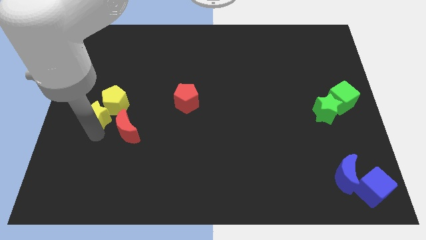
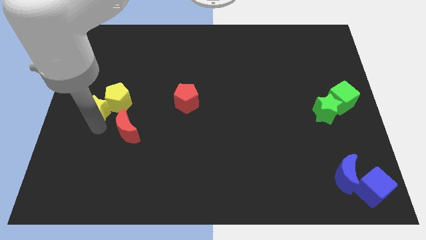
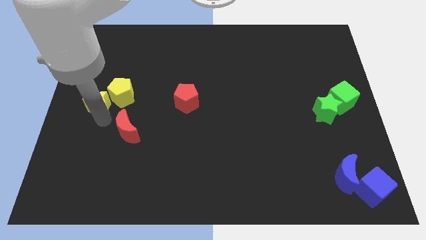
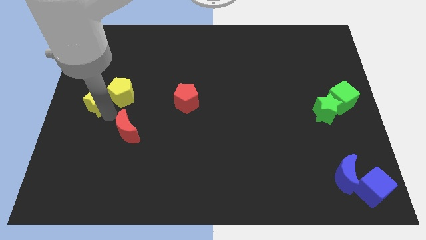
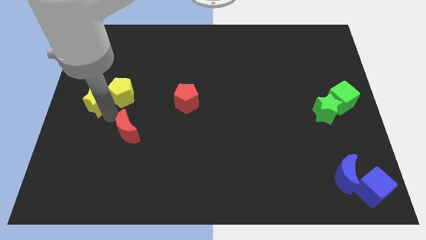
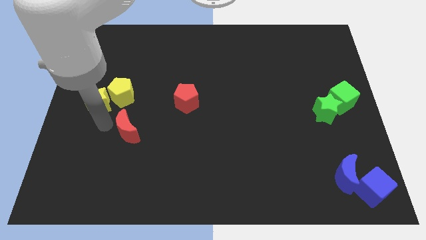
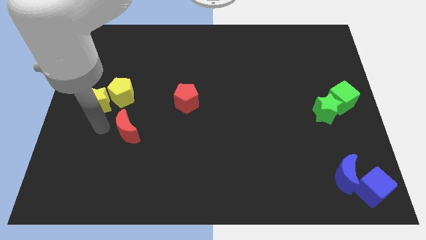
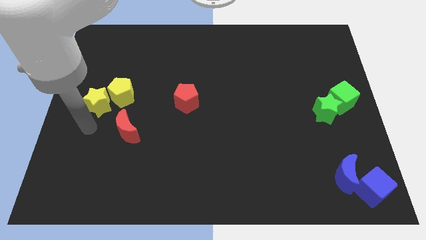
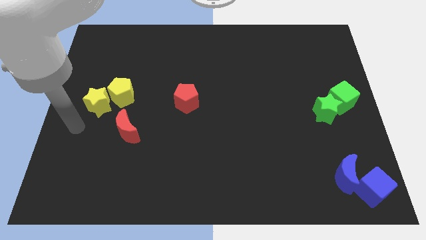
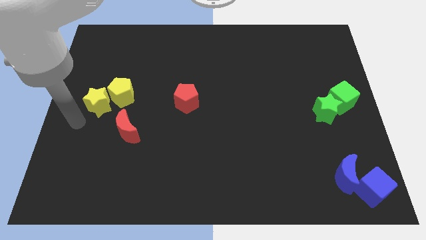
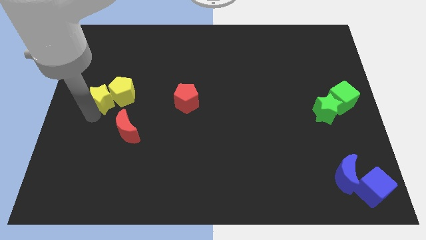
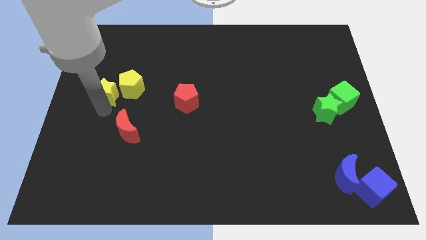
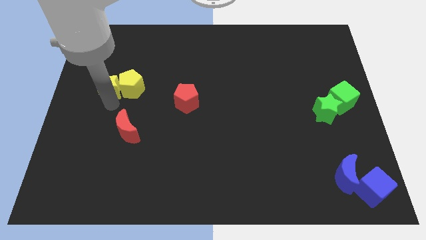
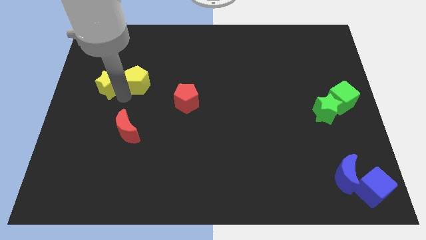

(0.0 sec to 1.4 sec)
push the yellow star to the left of the yellow pentagon

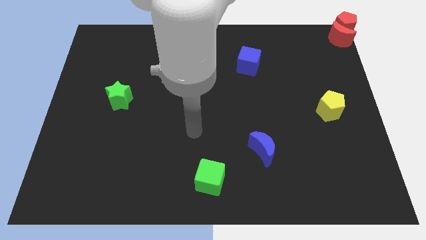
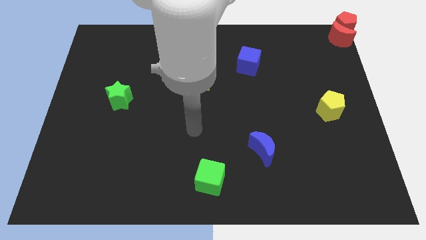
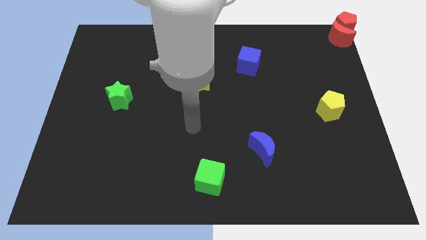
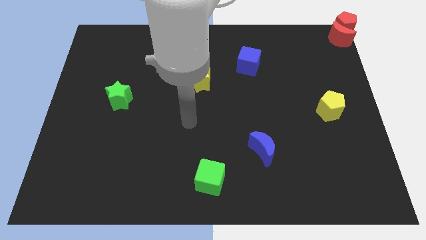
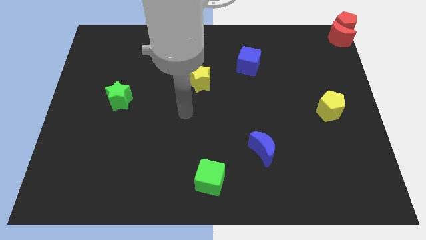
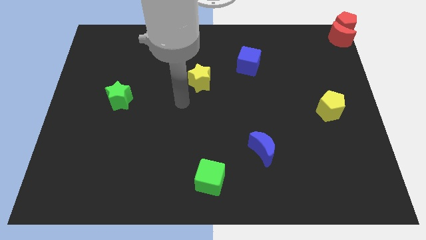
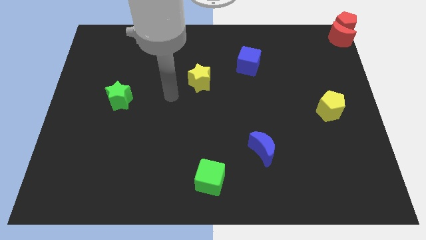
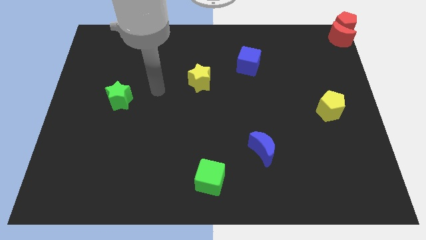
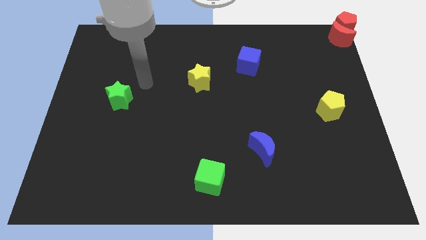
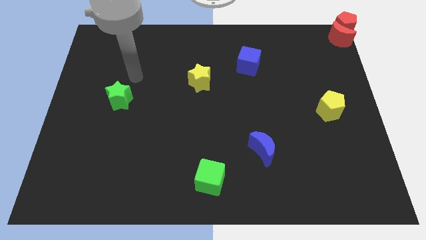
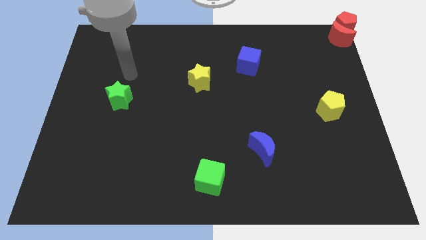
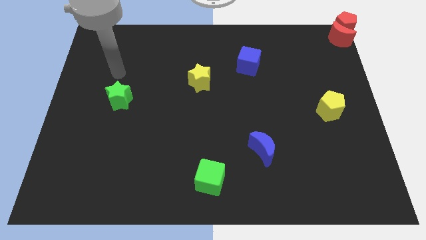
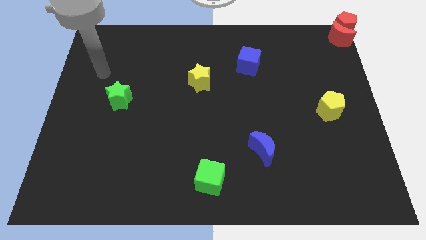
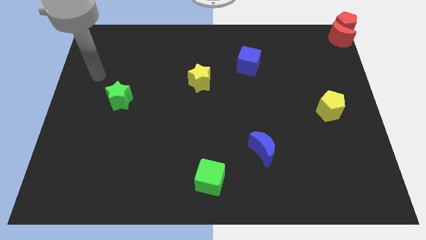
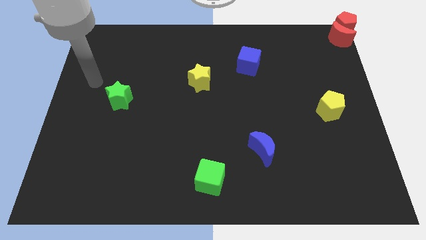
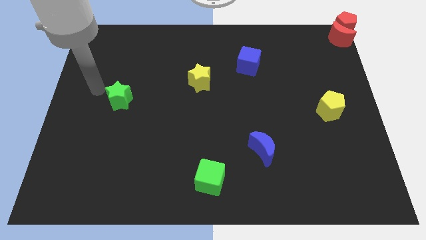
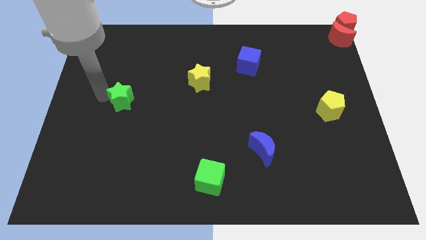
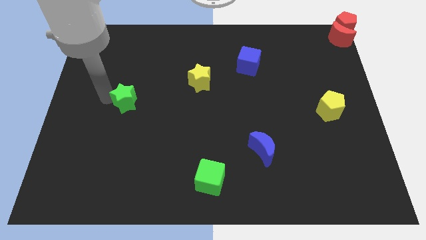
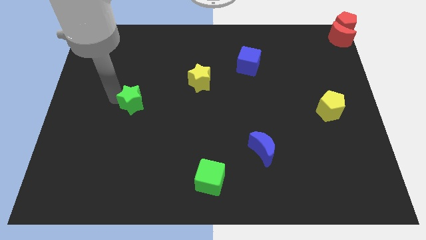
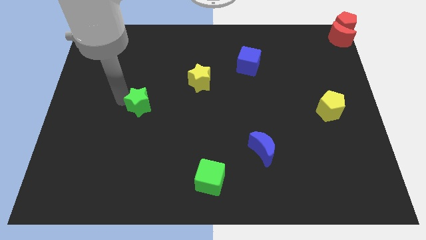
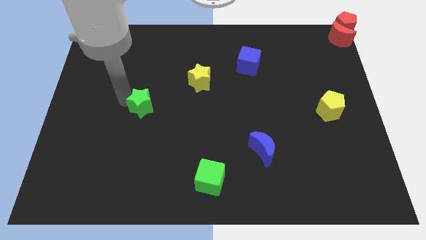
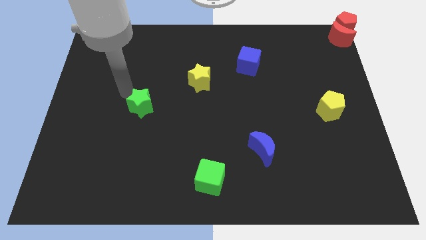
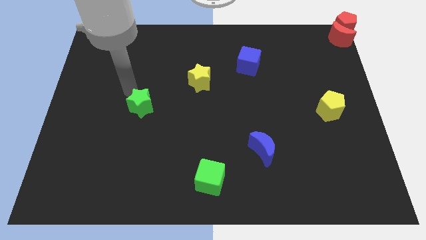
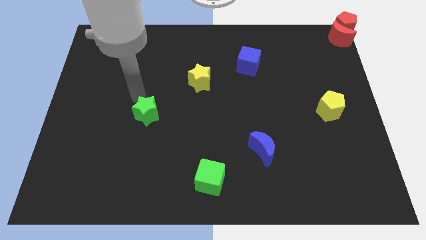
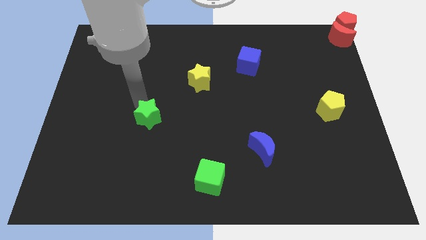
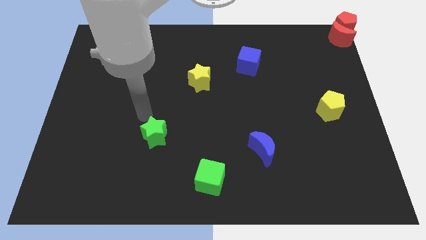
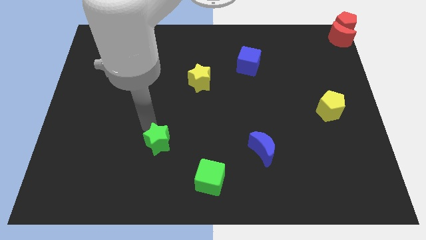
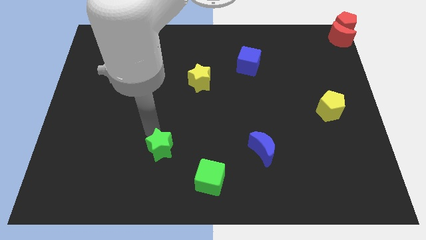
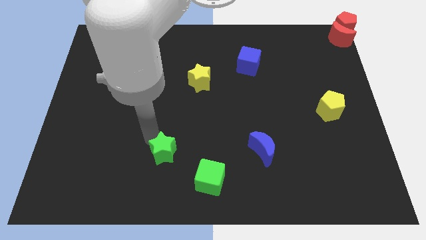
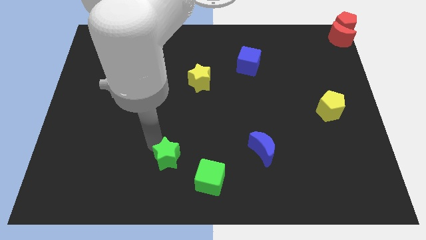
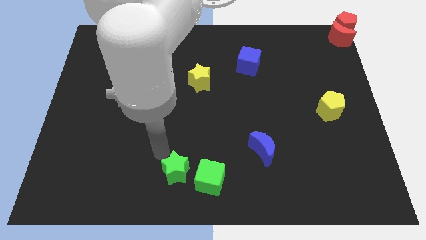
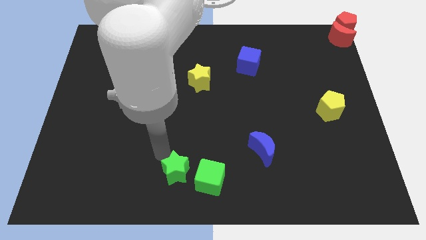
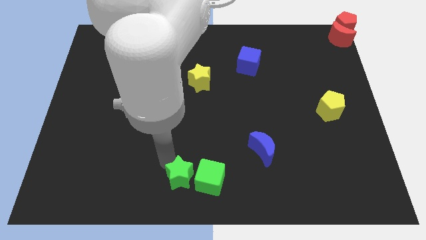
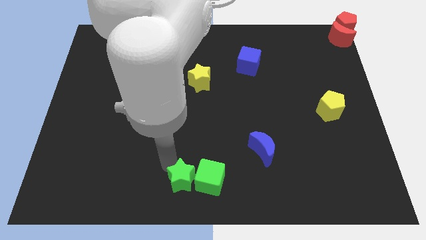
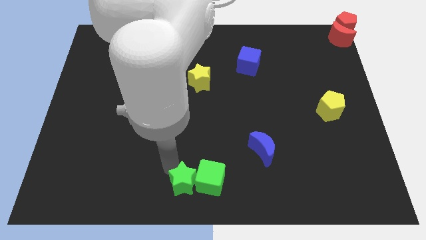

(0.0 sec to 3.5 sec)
move the green star left to the green cube

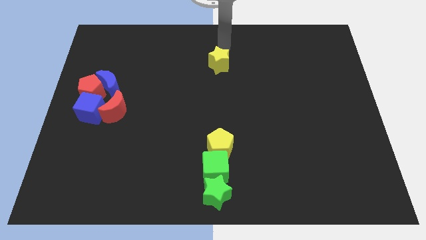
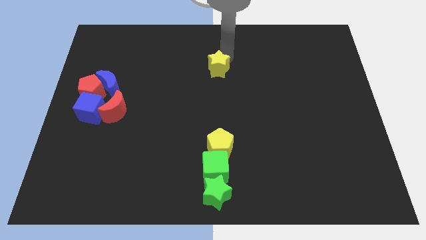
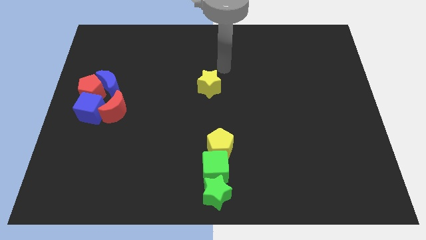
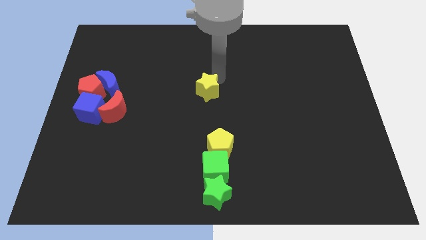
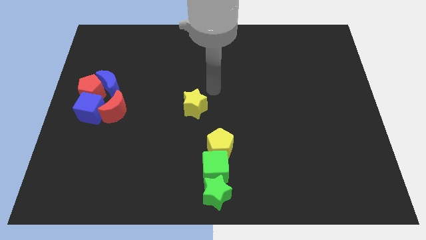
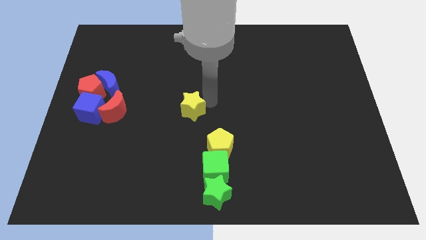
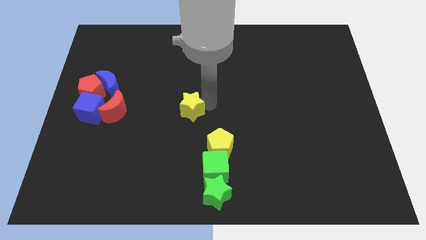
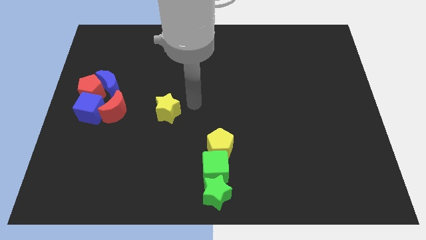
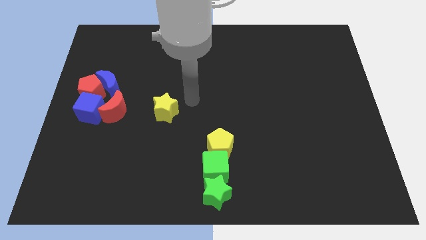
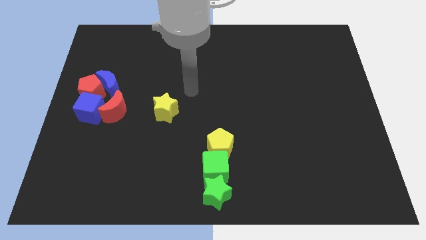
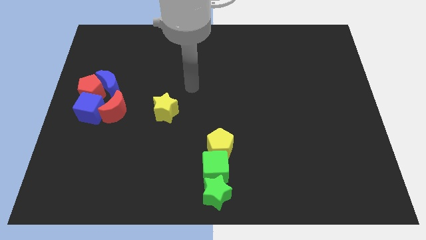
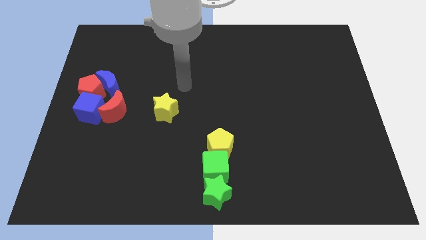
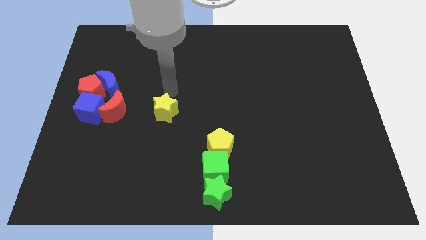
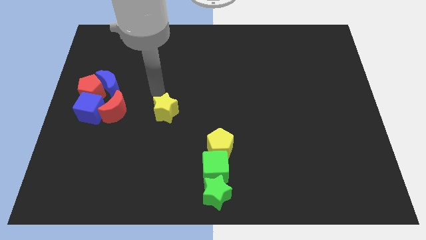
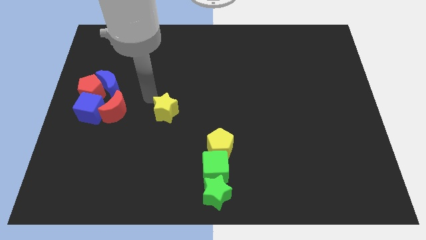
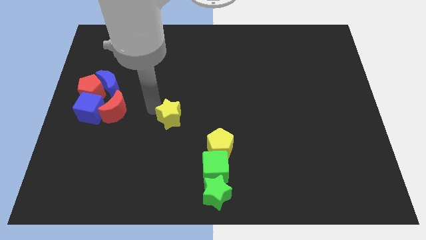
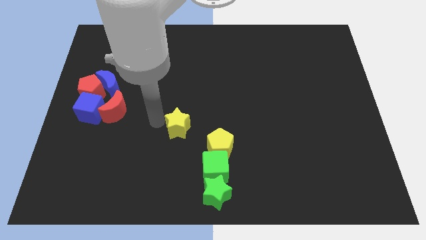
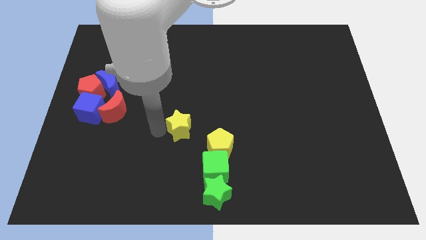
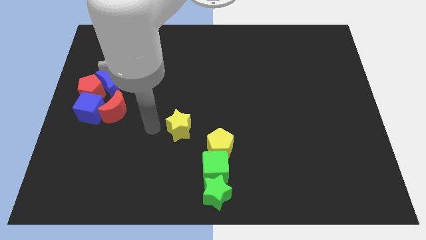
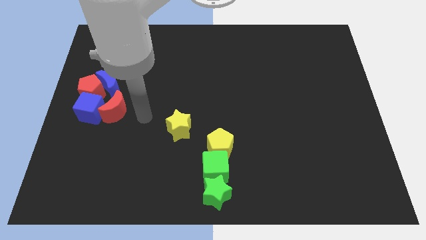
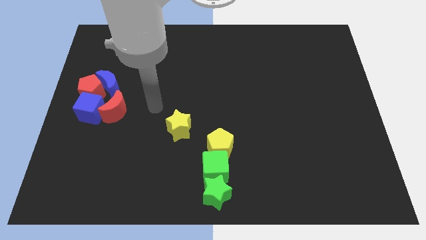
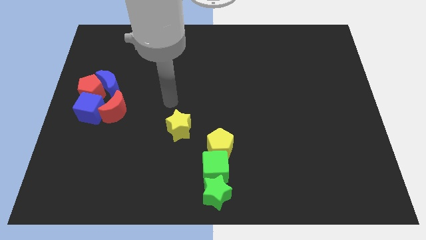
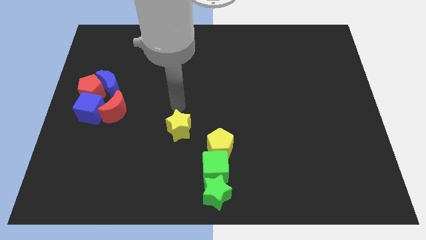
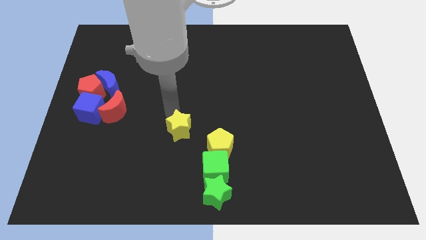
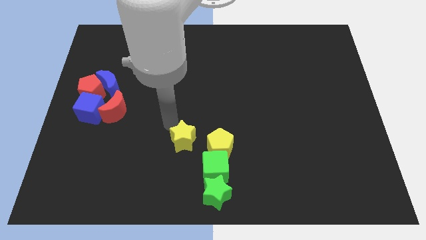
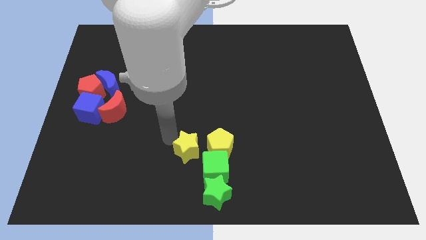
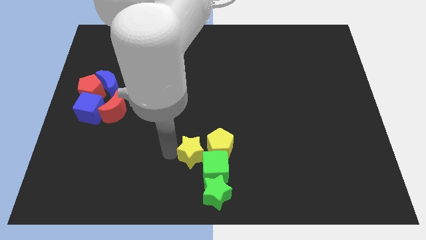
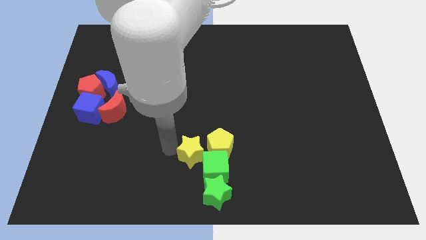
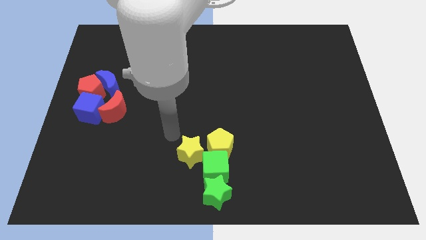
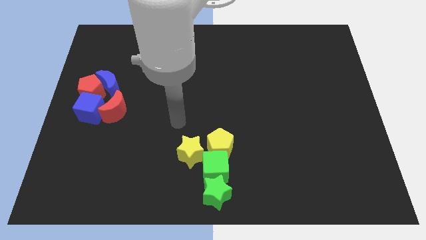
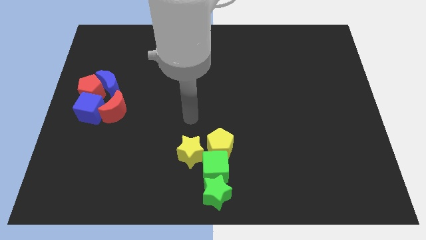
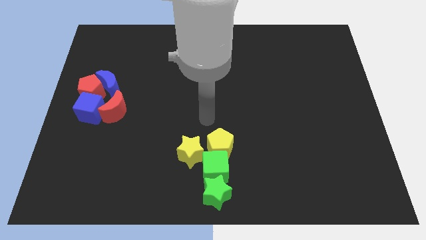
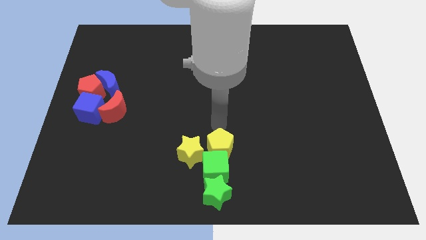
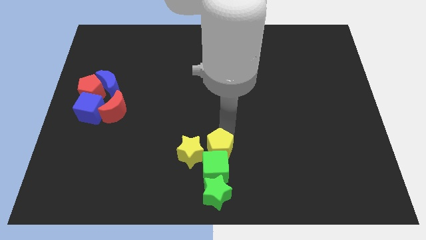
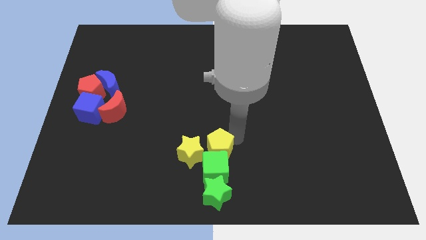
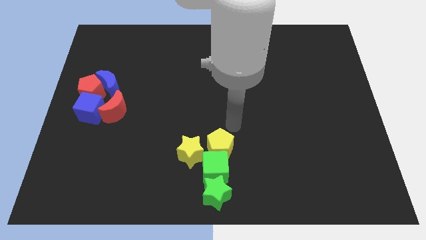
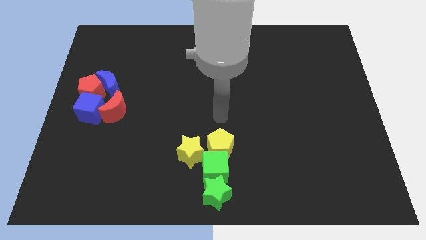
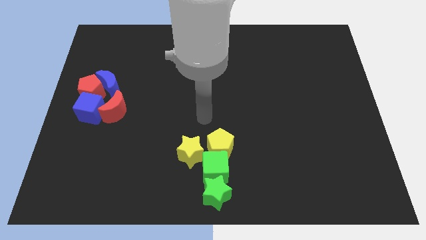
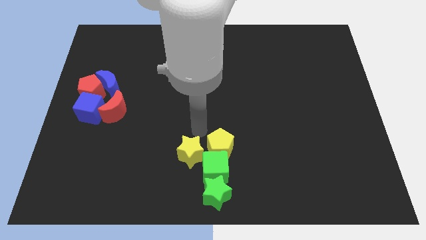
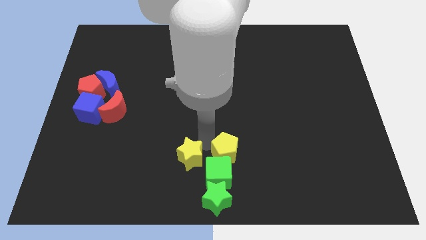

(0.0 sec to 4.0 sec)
move the yellow star to the left of the yellow pentagon

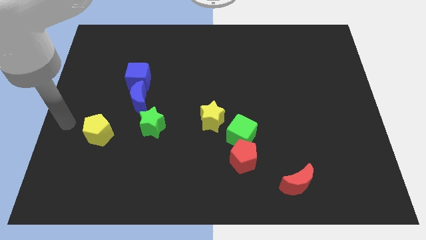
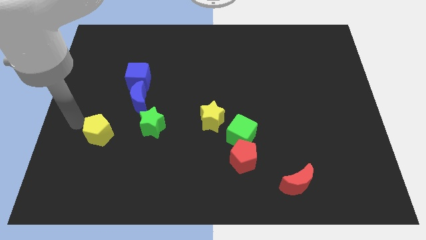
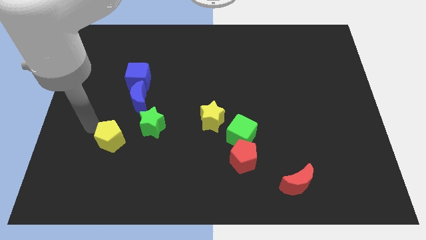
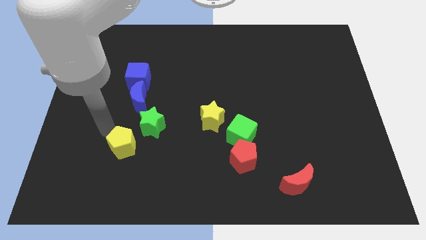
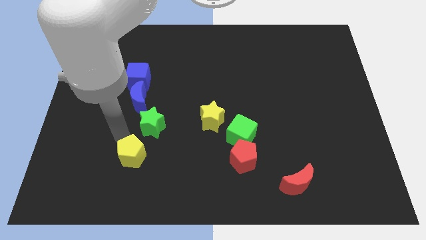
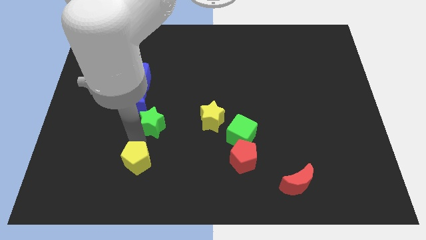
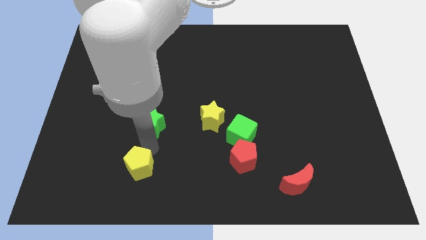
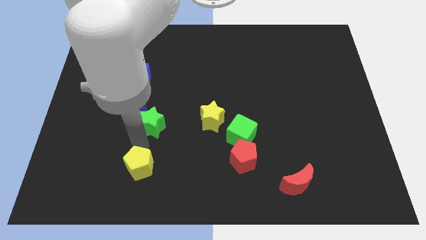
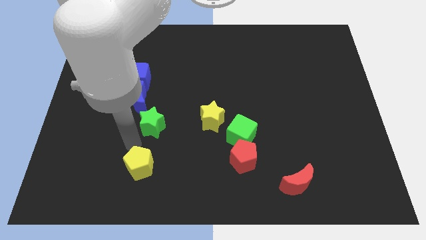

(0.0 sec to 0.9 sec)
place the yellow pentagon below the green star
